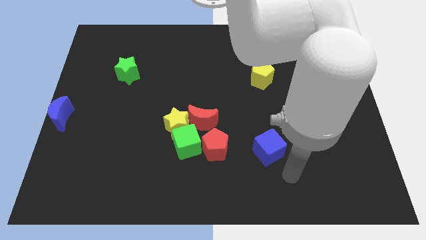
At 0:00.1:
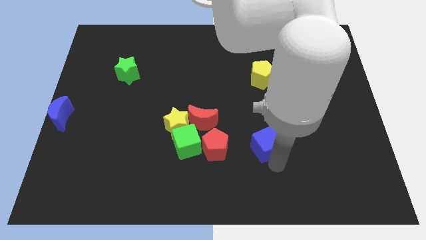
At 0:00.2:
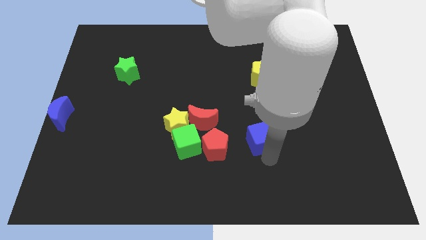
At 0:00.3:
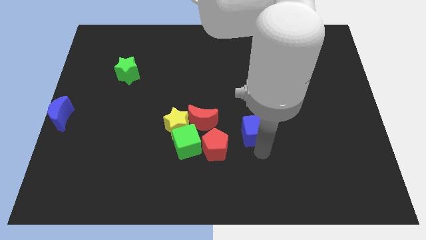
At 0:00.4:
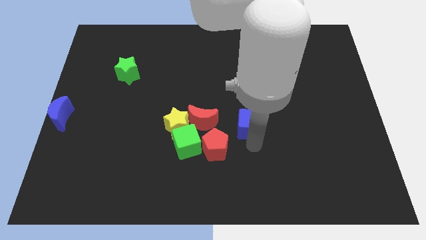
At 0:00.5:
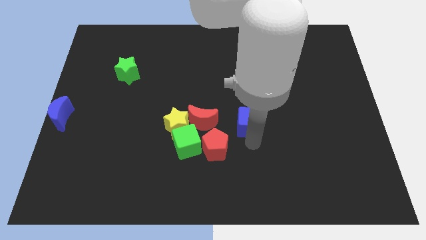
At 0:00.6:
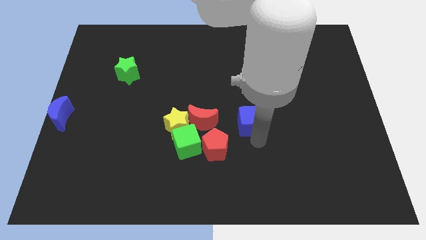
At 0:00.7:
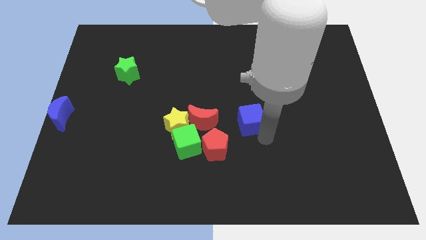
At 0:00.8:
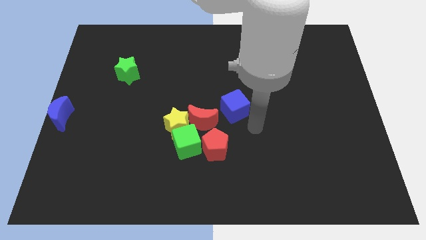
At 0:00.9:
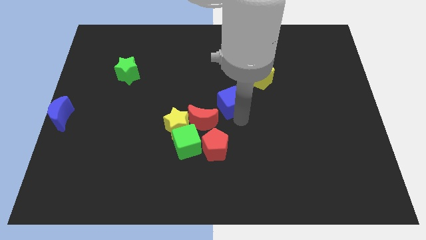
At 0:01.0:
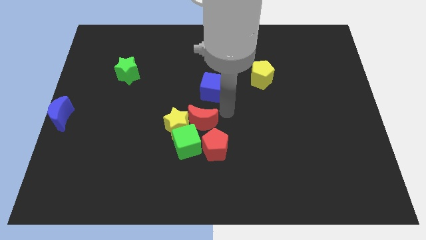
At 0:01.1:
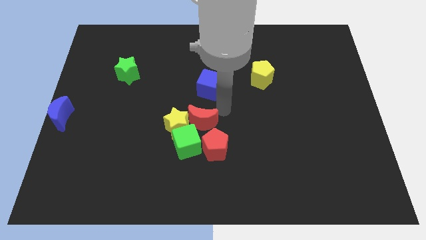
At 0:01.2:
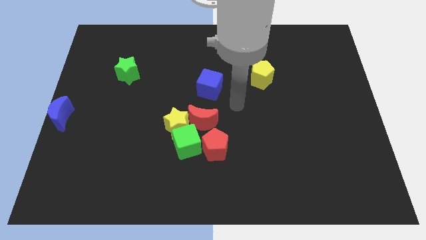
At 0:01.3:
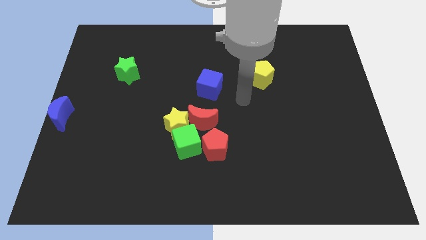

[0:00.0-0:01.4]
place the blue cube vertically above the red crescent

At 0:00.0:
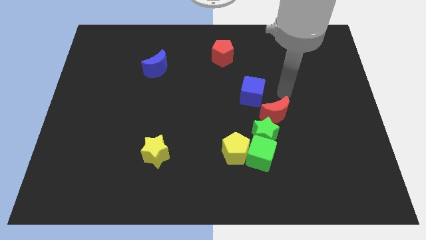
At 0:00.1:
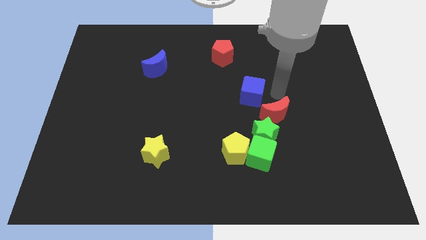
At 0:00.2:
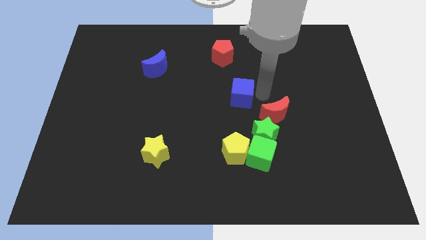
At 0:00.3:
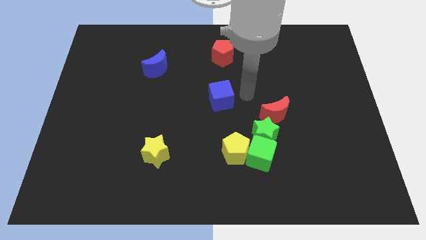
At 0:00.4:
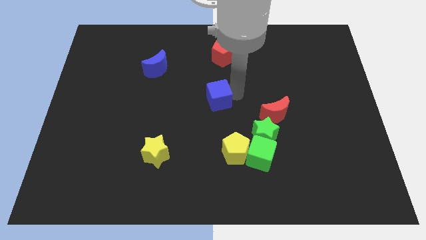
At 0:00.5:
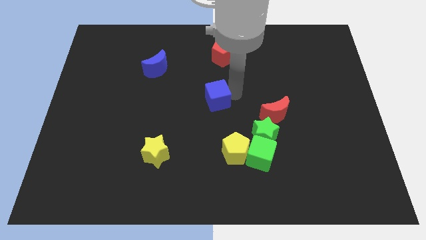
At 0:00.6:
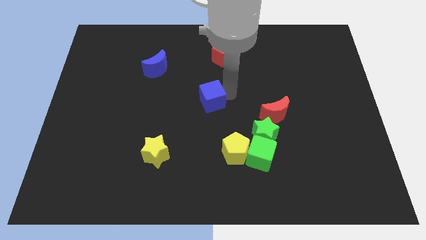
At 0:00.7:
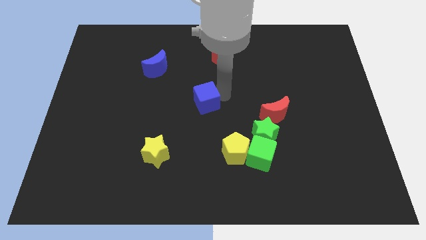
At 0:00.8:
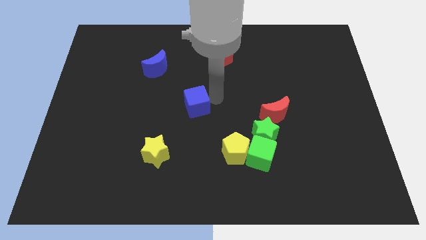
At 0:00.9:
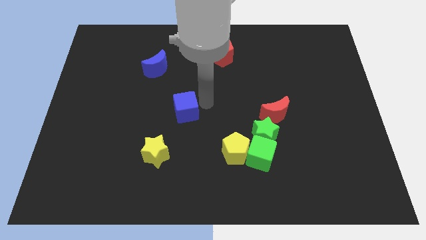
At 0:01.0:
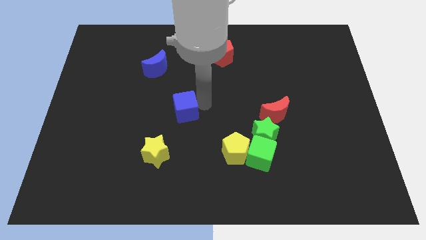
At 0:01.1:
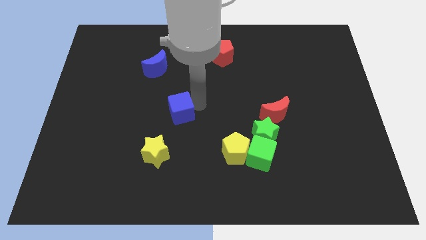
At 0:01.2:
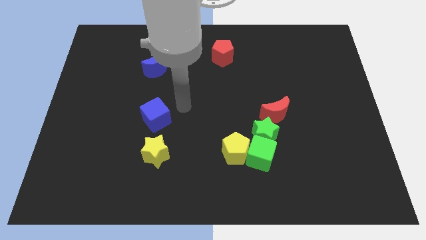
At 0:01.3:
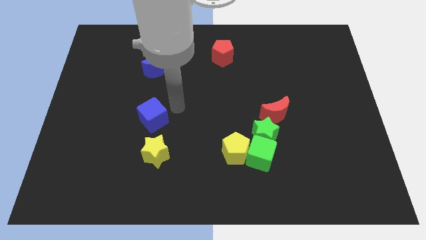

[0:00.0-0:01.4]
push the blue cube to the top of the yellow star

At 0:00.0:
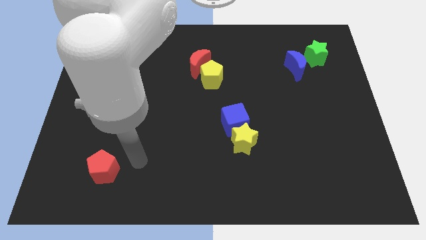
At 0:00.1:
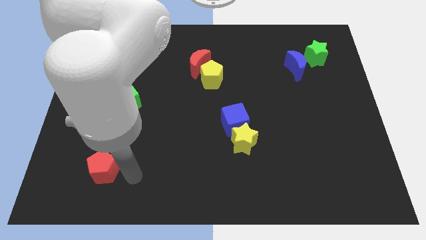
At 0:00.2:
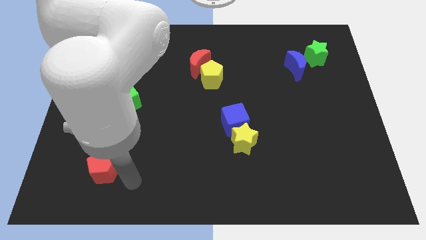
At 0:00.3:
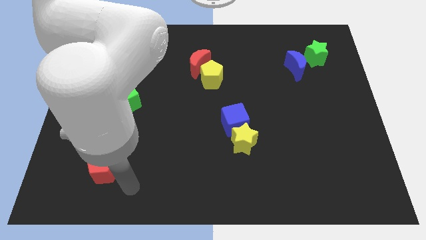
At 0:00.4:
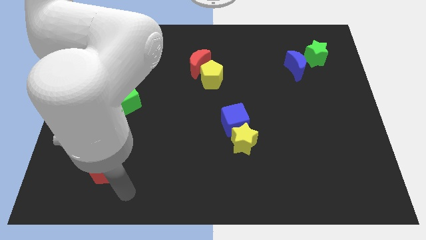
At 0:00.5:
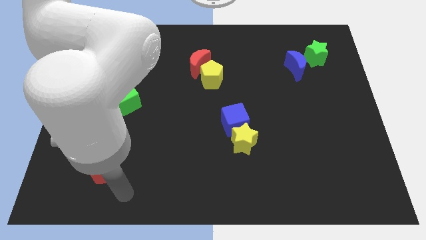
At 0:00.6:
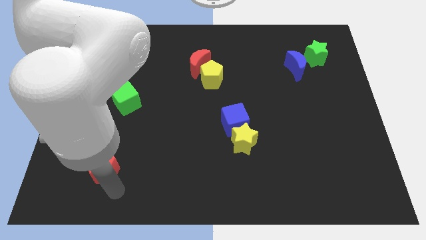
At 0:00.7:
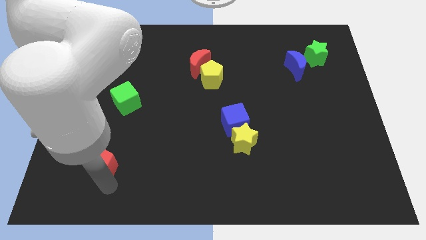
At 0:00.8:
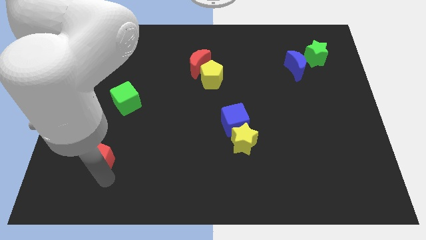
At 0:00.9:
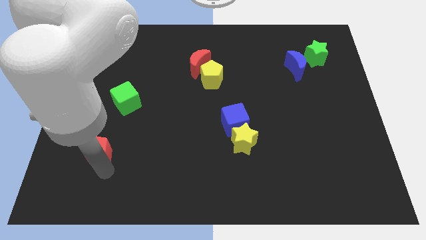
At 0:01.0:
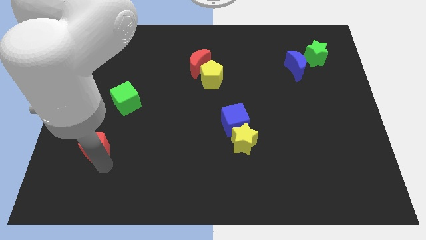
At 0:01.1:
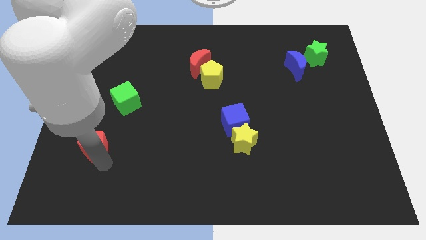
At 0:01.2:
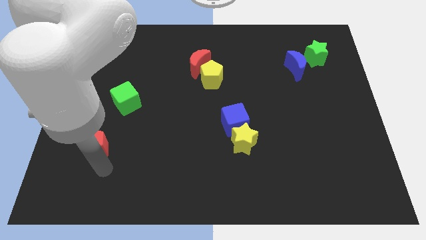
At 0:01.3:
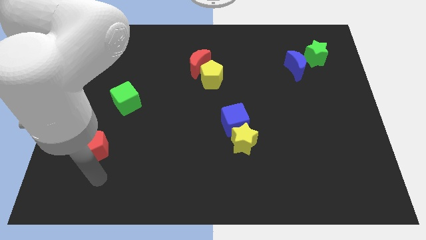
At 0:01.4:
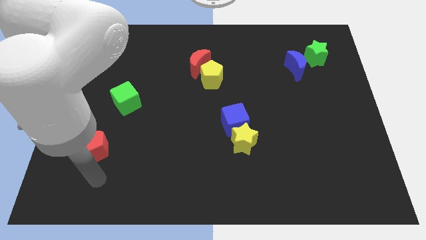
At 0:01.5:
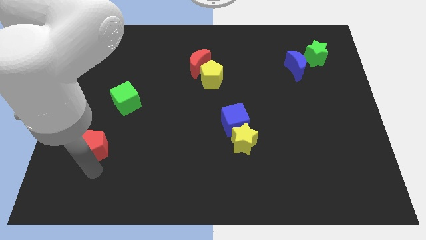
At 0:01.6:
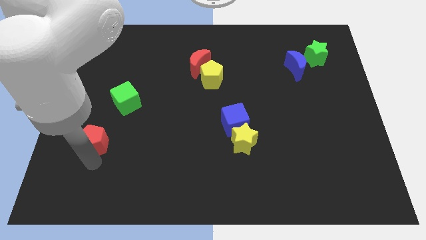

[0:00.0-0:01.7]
move the red pentagon slightly up

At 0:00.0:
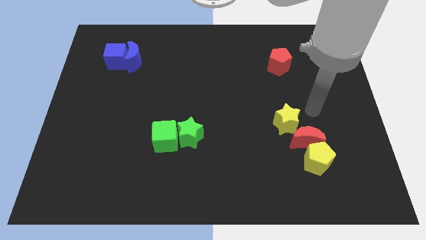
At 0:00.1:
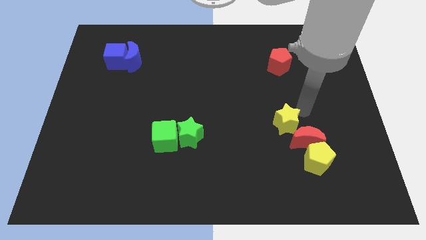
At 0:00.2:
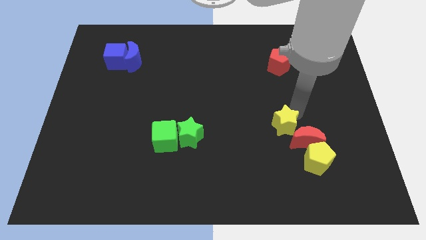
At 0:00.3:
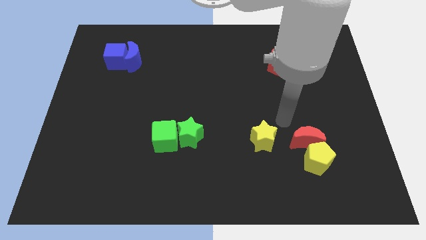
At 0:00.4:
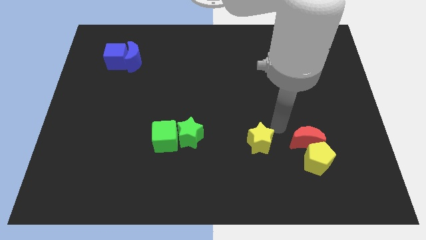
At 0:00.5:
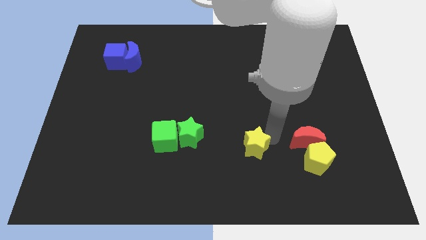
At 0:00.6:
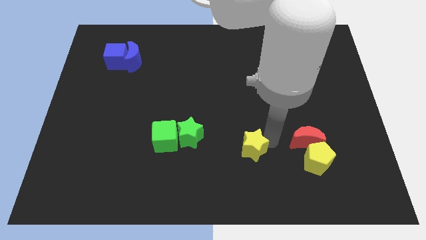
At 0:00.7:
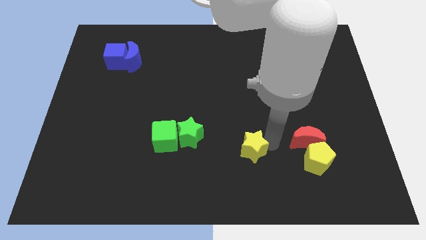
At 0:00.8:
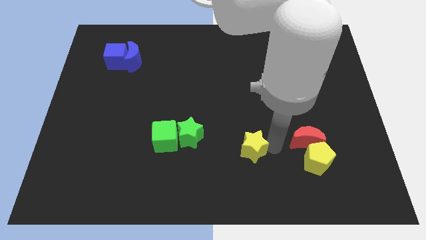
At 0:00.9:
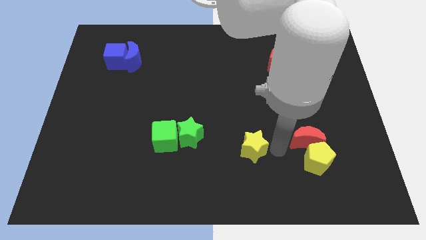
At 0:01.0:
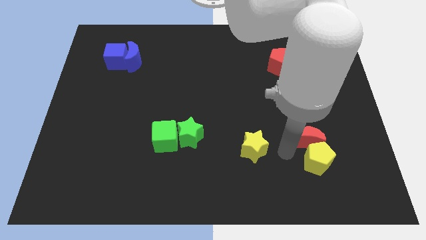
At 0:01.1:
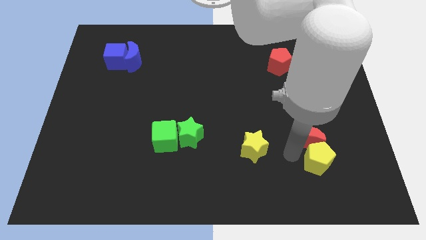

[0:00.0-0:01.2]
push yellow star away from red crescent

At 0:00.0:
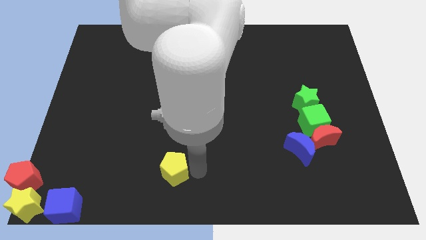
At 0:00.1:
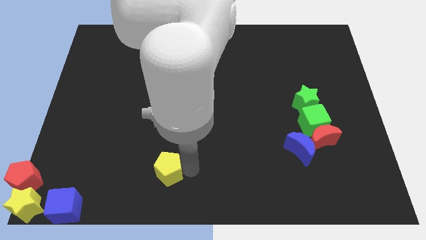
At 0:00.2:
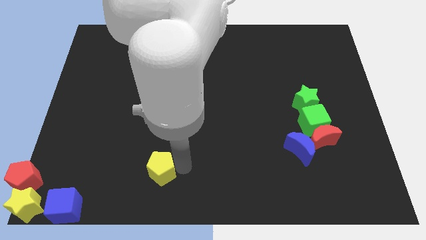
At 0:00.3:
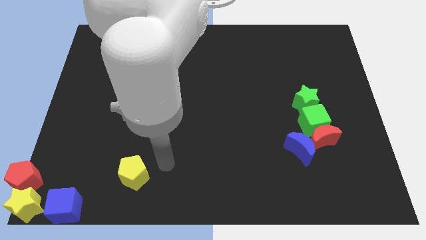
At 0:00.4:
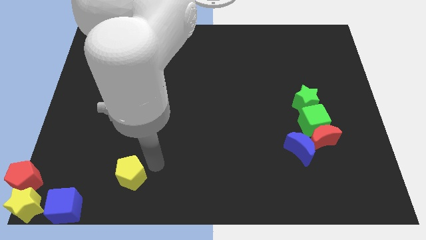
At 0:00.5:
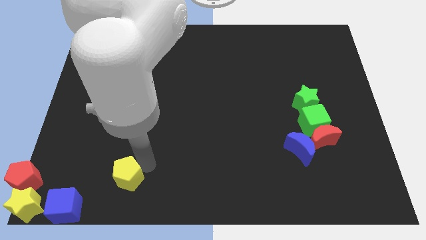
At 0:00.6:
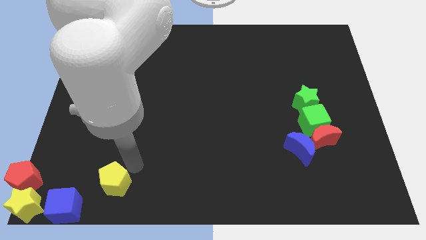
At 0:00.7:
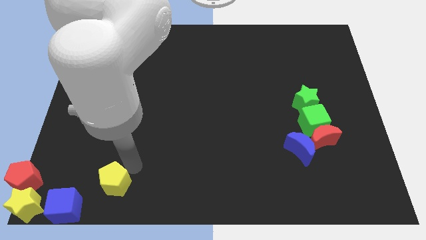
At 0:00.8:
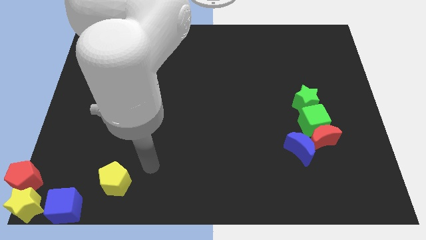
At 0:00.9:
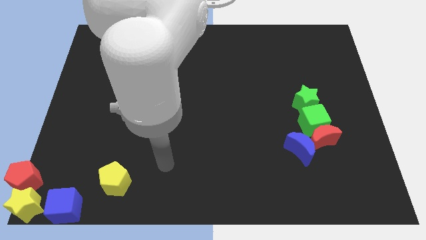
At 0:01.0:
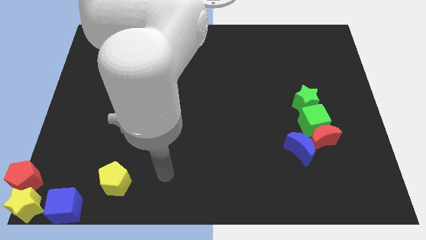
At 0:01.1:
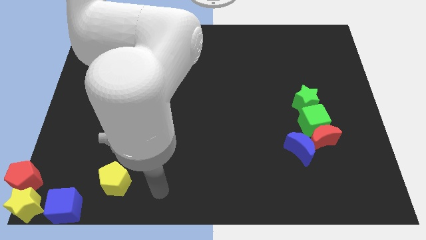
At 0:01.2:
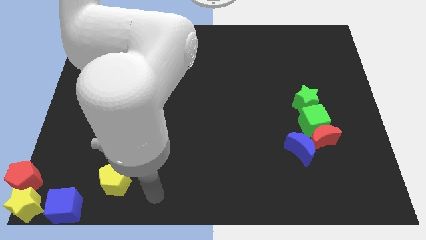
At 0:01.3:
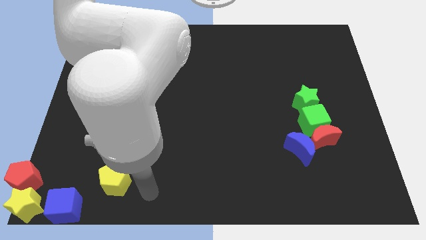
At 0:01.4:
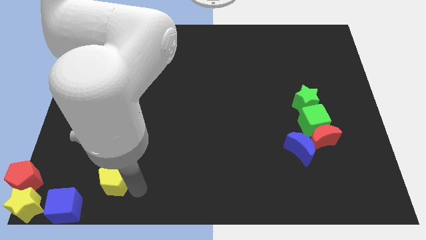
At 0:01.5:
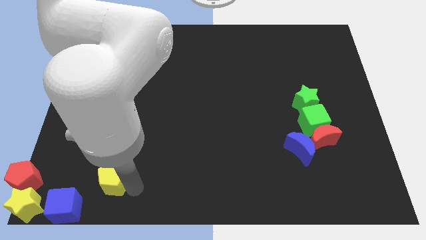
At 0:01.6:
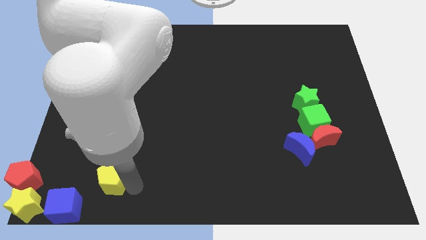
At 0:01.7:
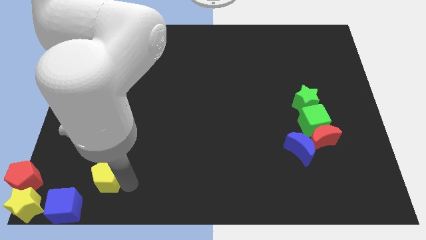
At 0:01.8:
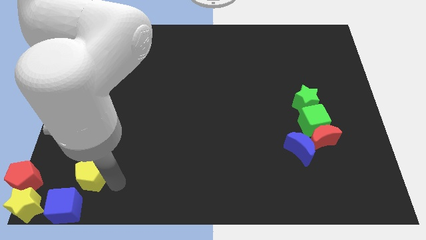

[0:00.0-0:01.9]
place the yellow pentagon to the center left of the board

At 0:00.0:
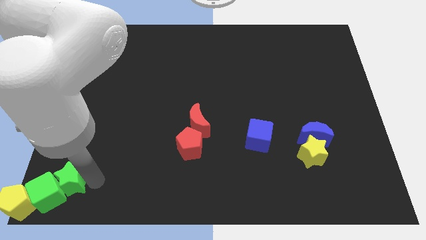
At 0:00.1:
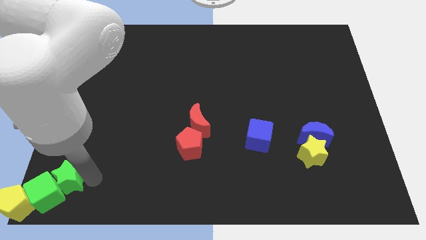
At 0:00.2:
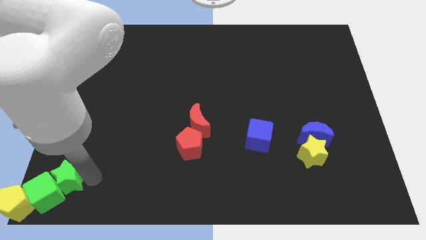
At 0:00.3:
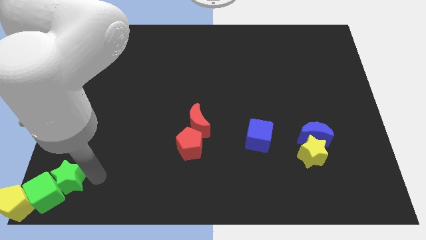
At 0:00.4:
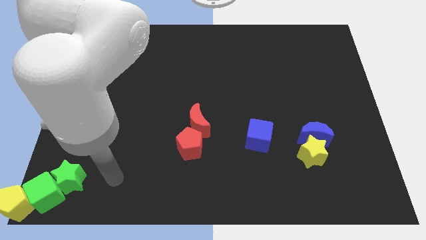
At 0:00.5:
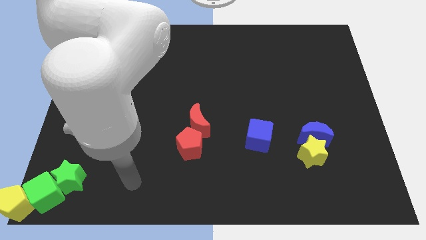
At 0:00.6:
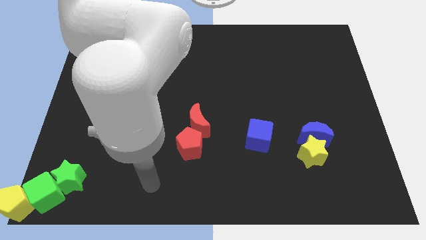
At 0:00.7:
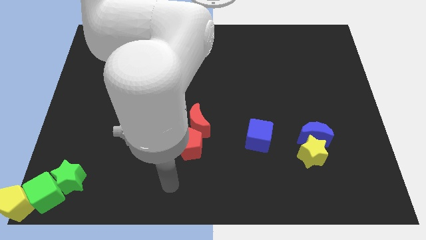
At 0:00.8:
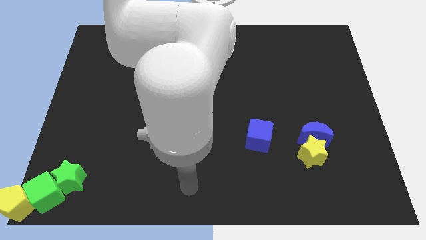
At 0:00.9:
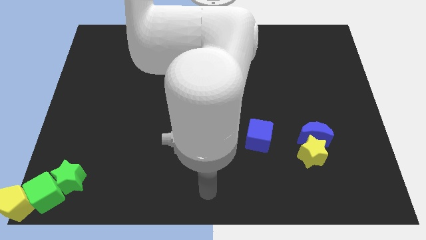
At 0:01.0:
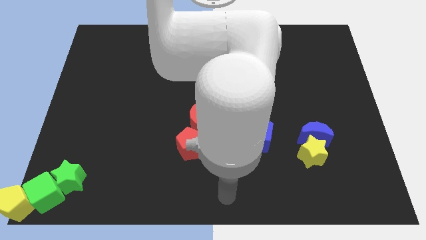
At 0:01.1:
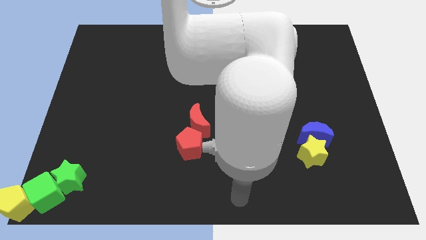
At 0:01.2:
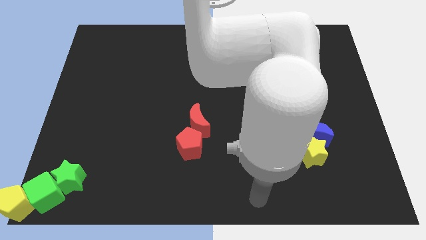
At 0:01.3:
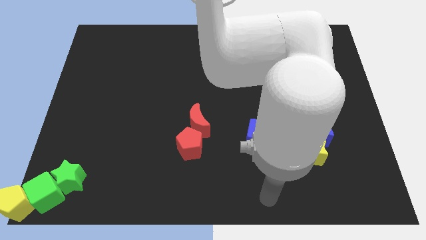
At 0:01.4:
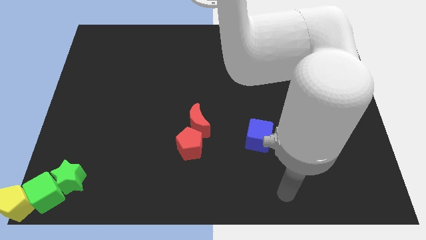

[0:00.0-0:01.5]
move your arm towards the bottom center of the board
